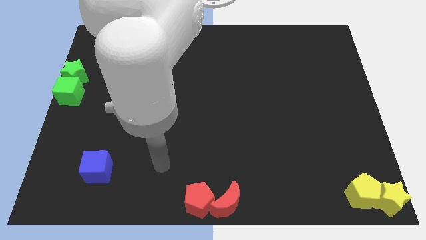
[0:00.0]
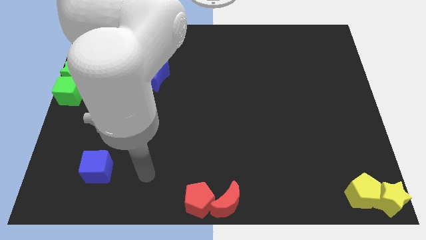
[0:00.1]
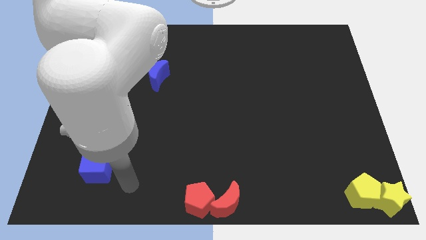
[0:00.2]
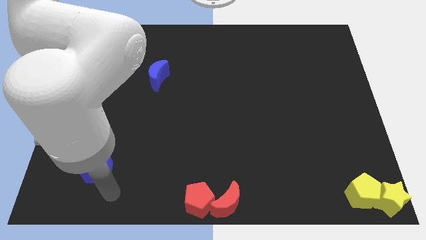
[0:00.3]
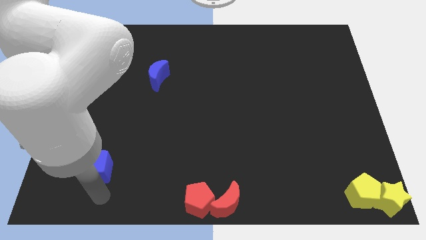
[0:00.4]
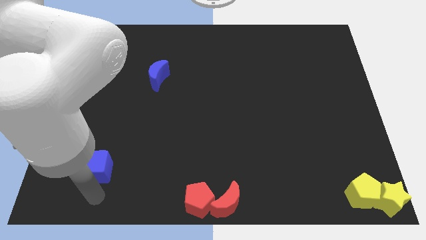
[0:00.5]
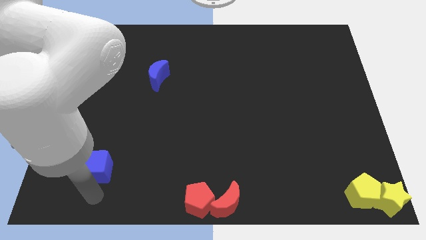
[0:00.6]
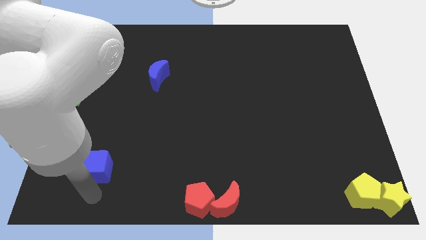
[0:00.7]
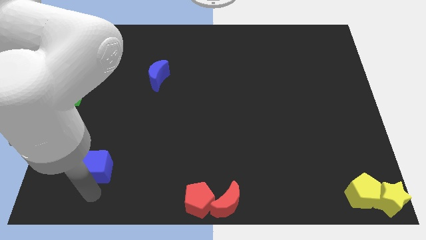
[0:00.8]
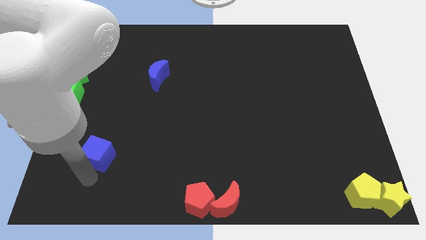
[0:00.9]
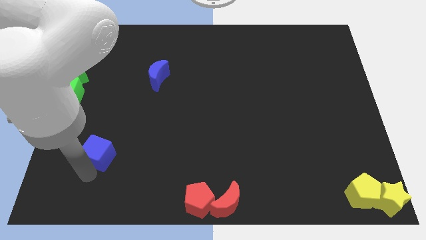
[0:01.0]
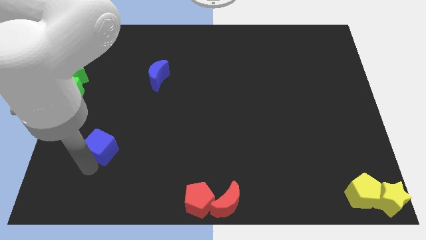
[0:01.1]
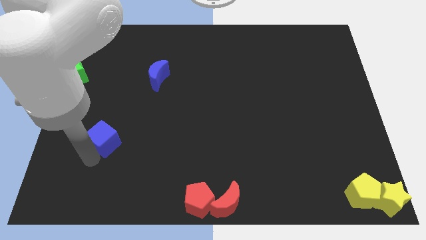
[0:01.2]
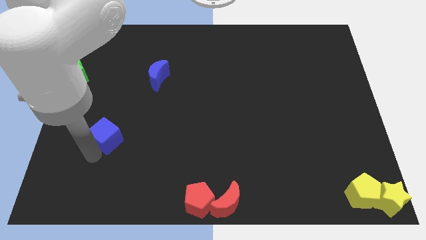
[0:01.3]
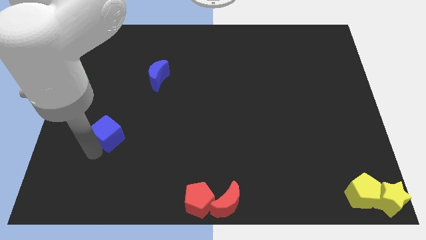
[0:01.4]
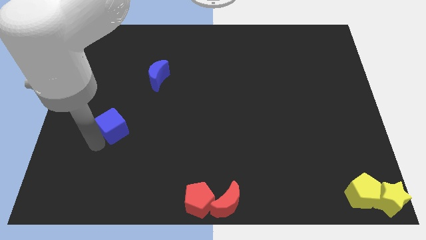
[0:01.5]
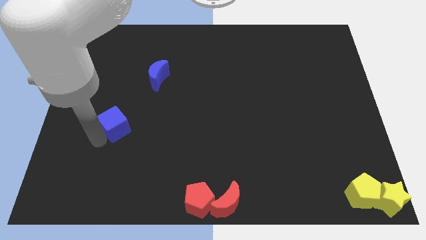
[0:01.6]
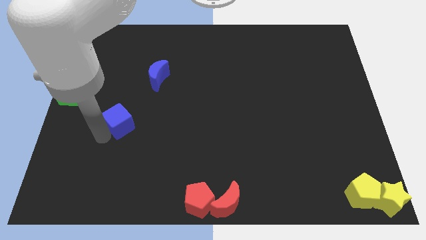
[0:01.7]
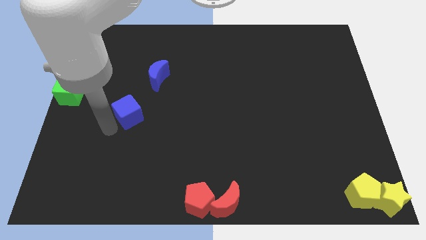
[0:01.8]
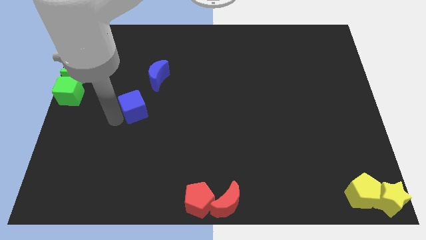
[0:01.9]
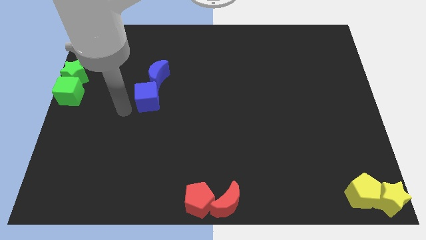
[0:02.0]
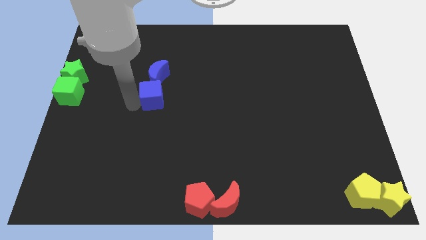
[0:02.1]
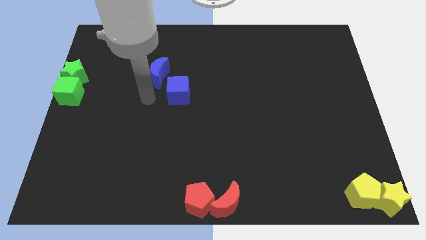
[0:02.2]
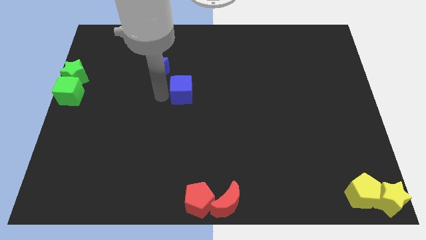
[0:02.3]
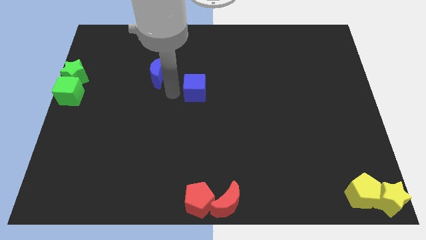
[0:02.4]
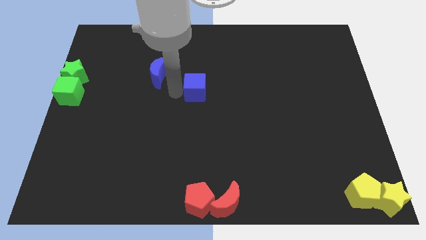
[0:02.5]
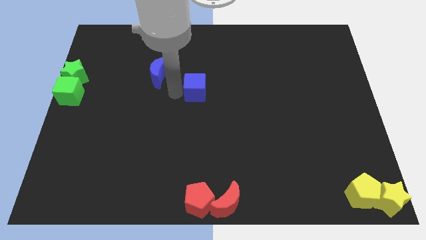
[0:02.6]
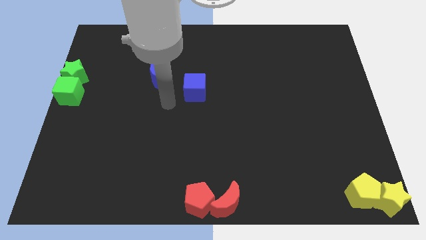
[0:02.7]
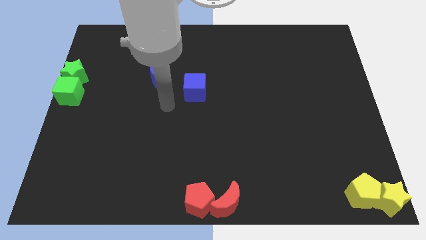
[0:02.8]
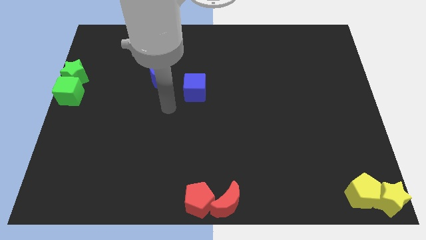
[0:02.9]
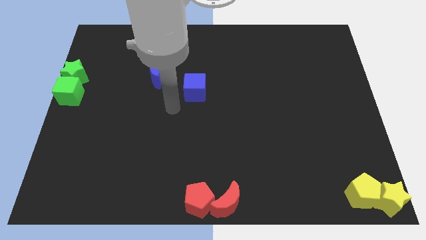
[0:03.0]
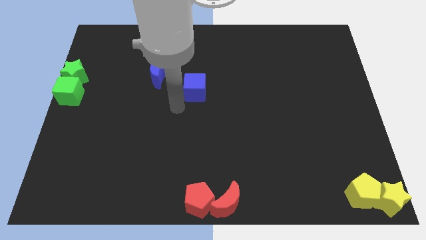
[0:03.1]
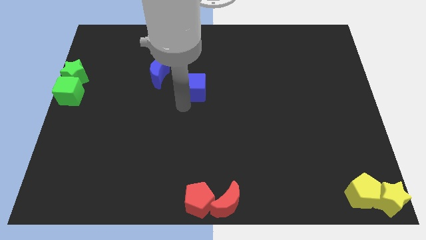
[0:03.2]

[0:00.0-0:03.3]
move the blue cube towards top

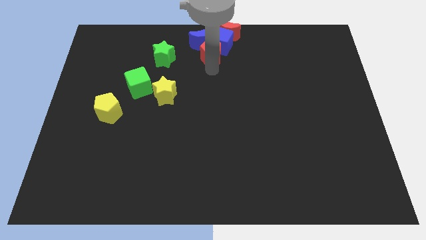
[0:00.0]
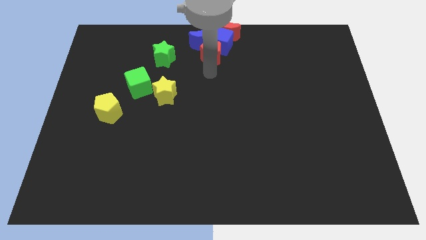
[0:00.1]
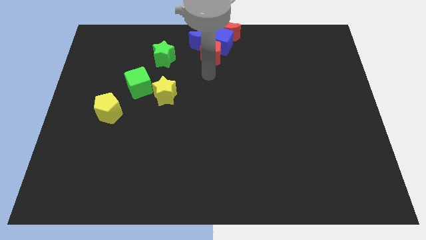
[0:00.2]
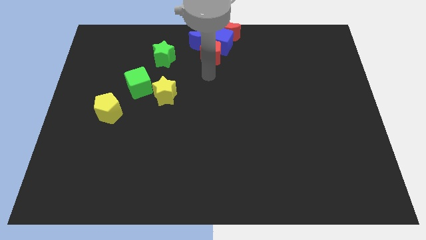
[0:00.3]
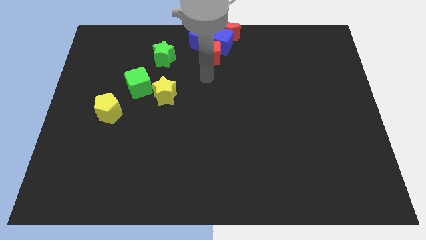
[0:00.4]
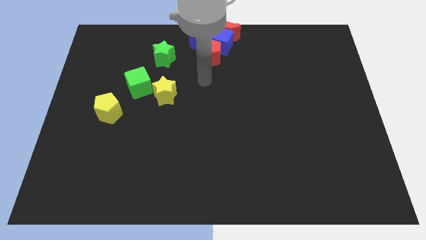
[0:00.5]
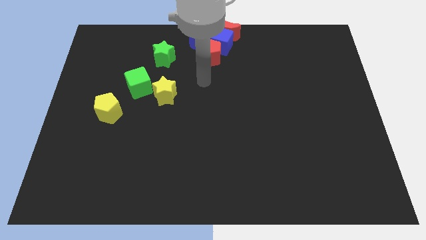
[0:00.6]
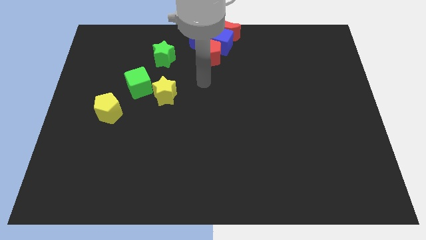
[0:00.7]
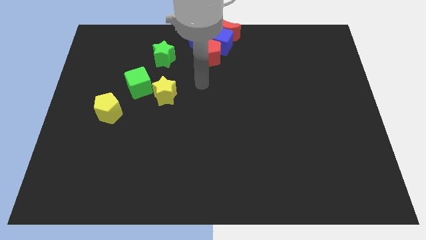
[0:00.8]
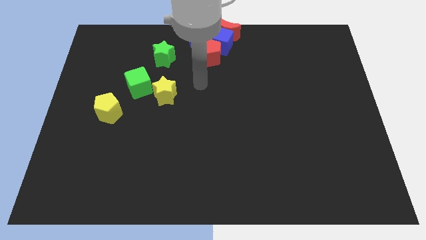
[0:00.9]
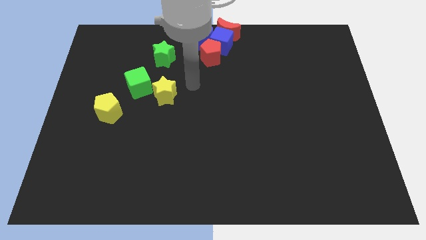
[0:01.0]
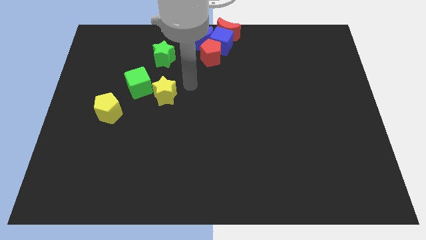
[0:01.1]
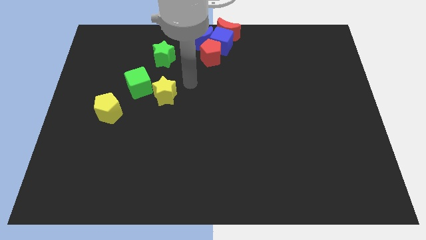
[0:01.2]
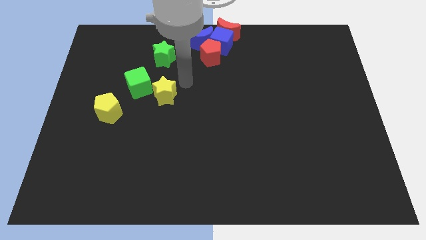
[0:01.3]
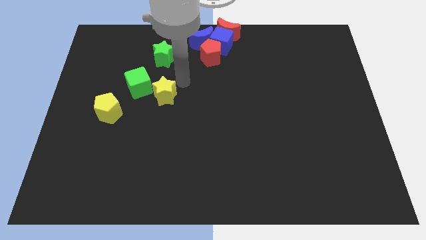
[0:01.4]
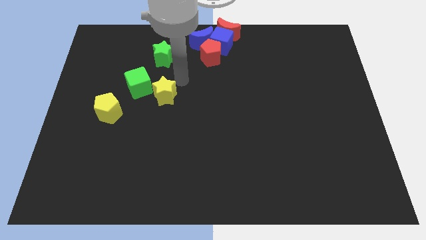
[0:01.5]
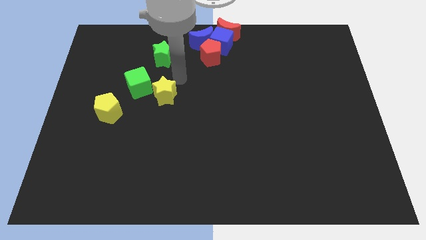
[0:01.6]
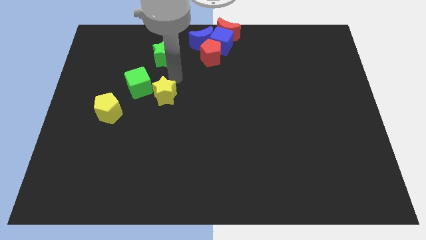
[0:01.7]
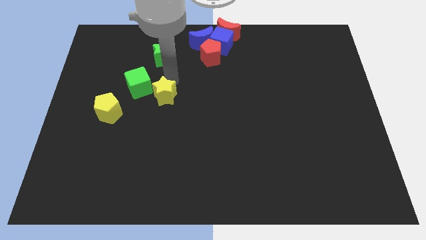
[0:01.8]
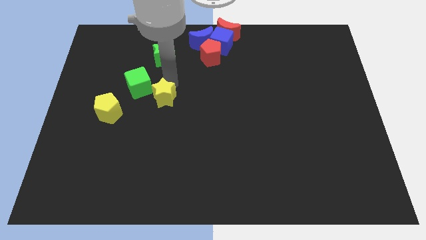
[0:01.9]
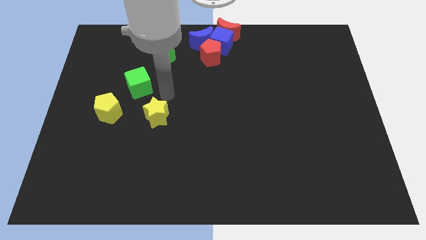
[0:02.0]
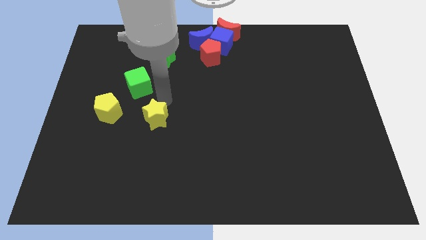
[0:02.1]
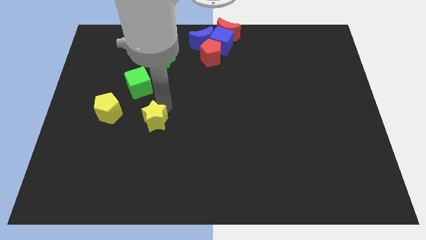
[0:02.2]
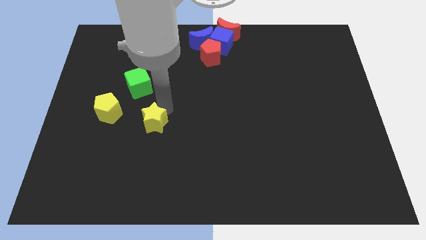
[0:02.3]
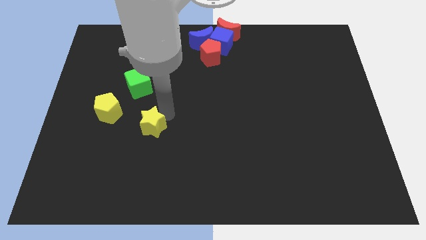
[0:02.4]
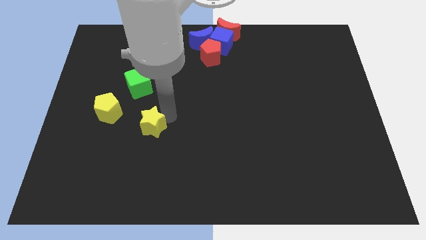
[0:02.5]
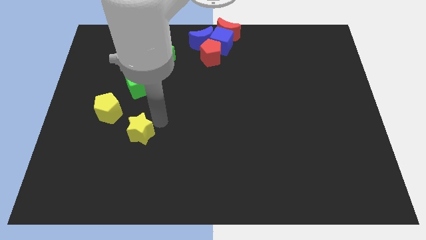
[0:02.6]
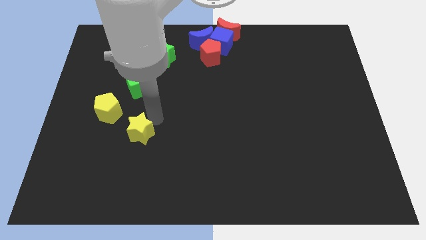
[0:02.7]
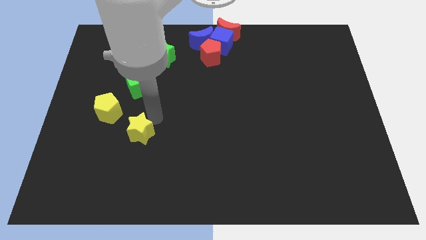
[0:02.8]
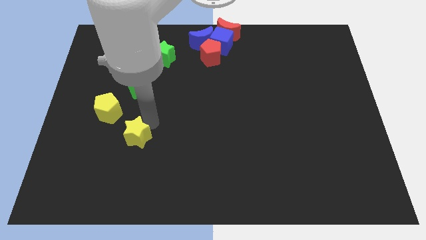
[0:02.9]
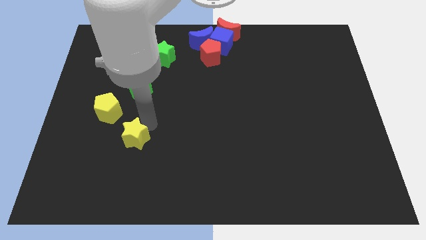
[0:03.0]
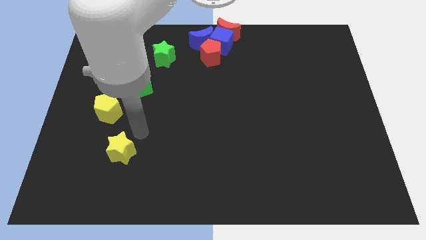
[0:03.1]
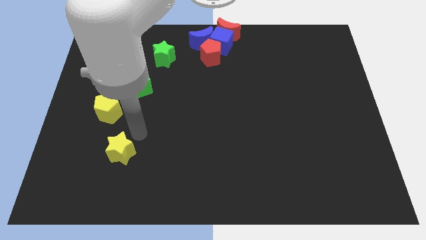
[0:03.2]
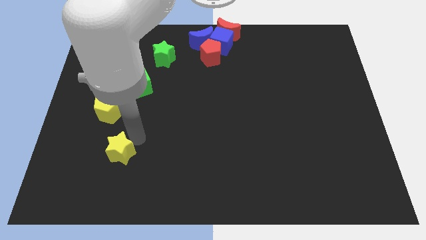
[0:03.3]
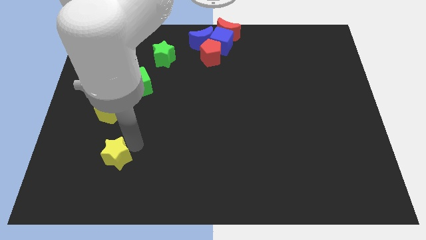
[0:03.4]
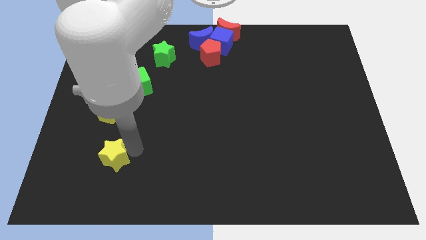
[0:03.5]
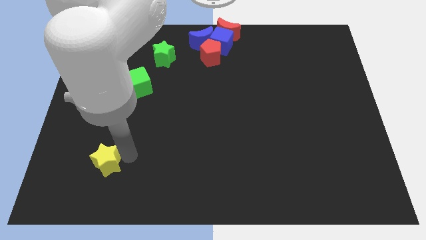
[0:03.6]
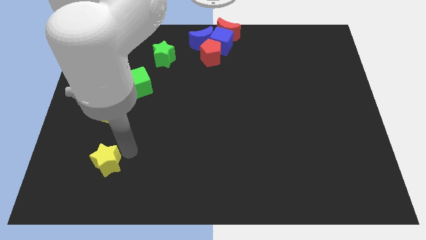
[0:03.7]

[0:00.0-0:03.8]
move the yellow star to the bottom left side of the board

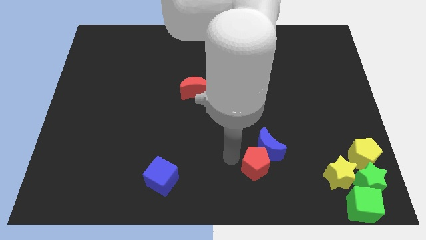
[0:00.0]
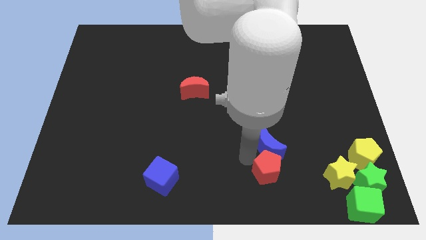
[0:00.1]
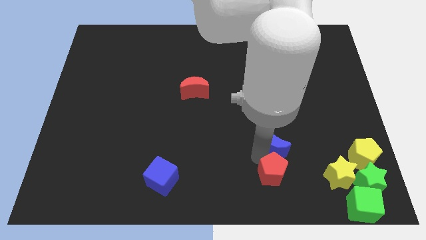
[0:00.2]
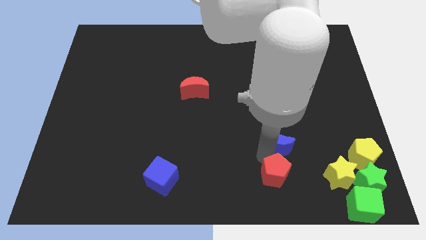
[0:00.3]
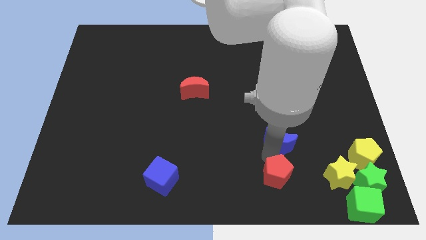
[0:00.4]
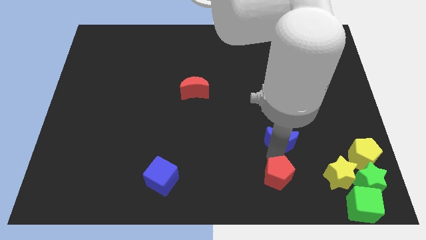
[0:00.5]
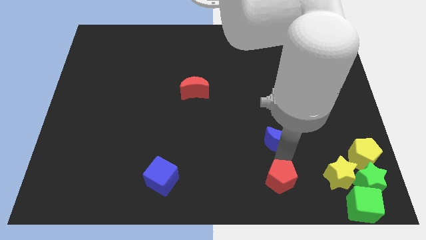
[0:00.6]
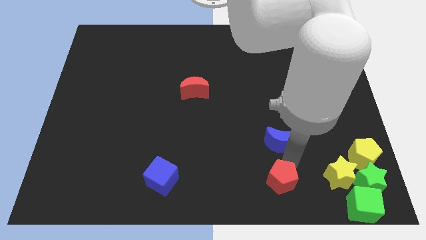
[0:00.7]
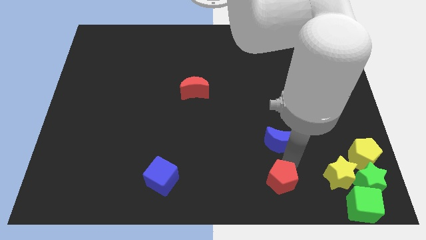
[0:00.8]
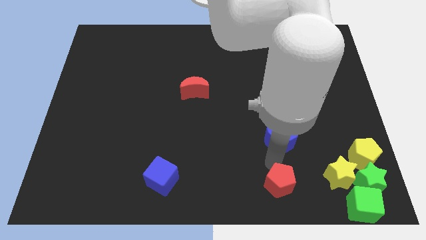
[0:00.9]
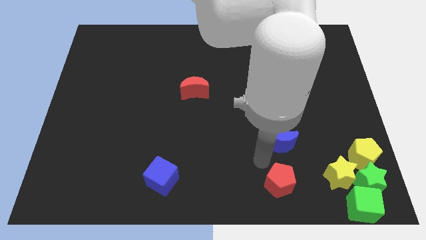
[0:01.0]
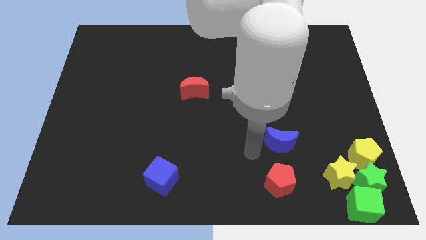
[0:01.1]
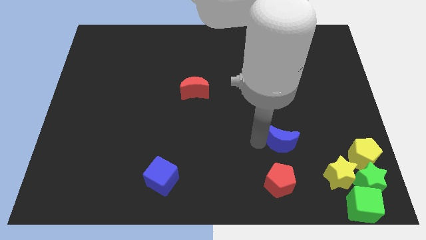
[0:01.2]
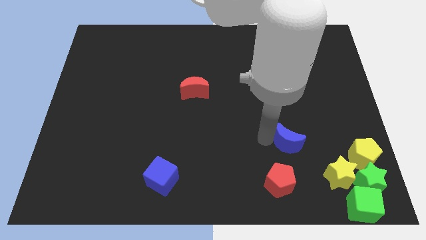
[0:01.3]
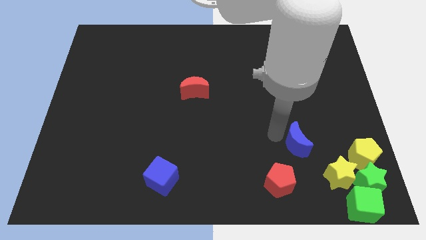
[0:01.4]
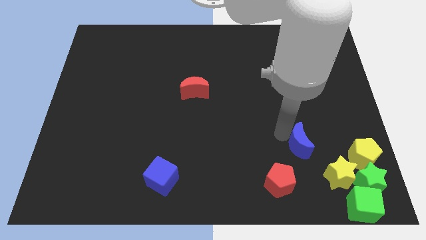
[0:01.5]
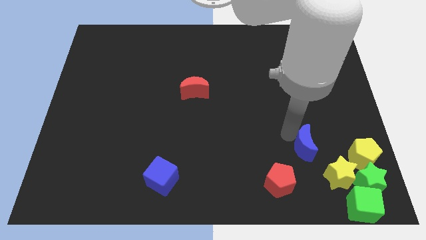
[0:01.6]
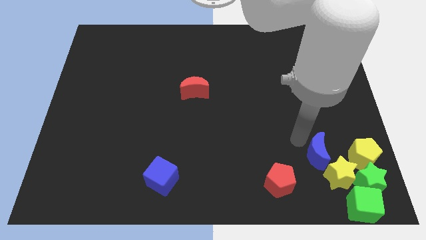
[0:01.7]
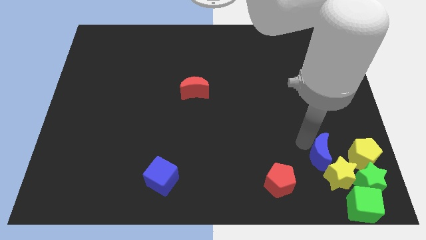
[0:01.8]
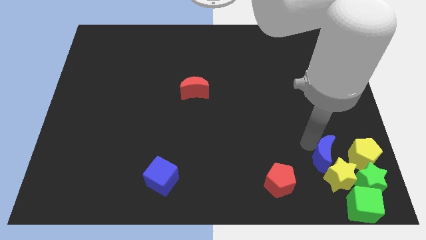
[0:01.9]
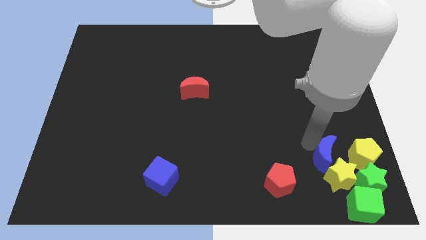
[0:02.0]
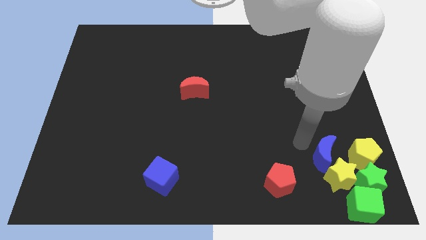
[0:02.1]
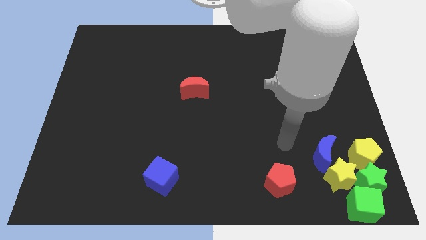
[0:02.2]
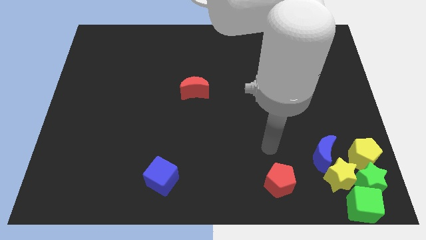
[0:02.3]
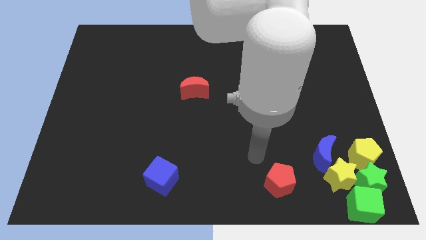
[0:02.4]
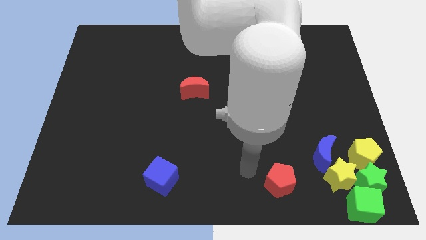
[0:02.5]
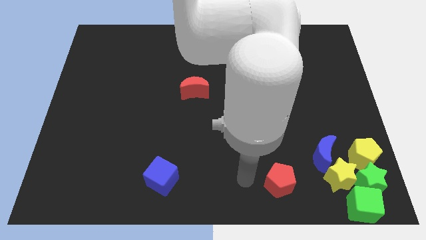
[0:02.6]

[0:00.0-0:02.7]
separate the red pentagon from the blue moon
